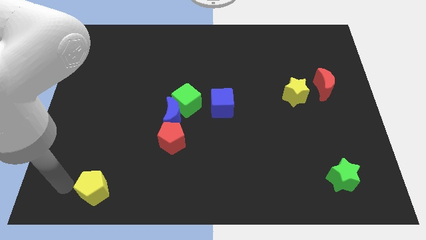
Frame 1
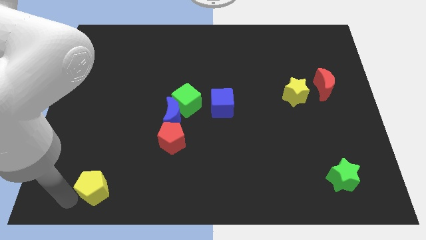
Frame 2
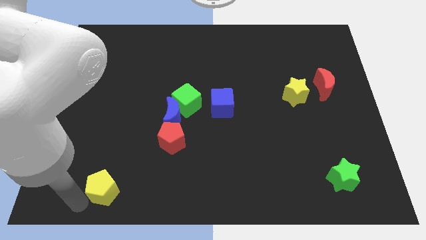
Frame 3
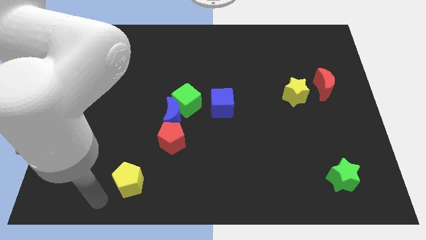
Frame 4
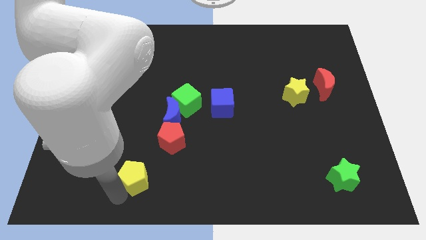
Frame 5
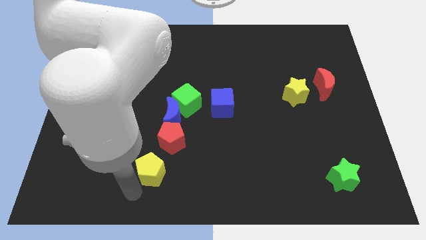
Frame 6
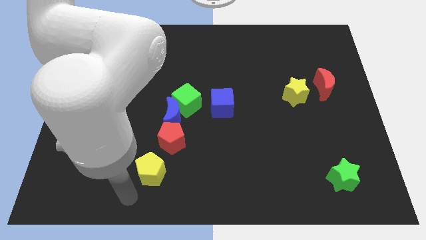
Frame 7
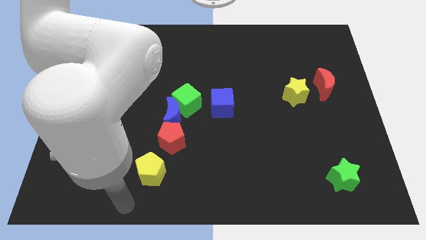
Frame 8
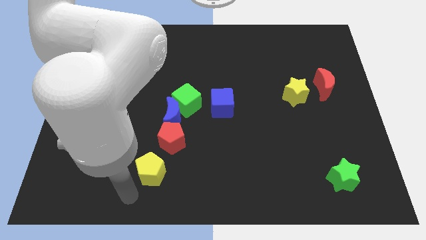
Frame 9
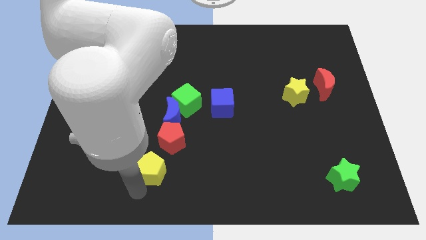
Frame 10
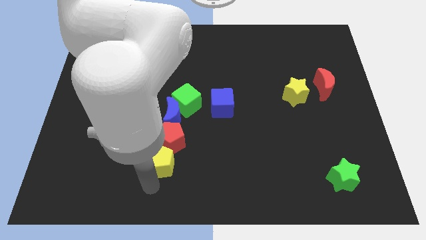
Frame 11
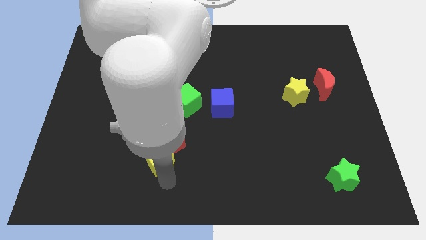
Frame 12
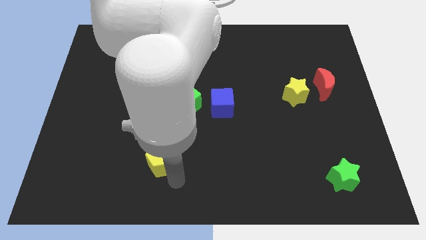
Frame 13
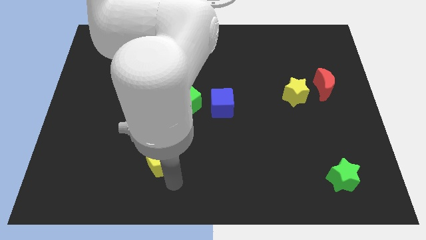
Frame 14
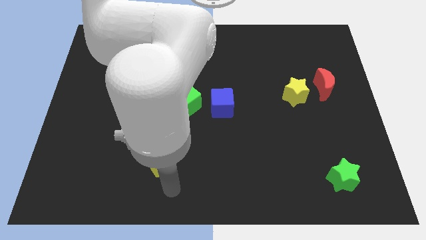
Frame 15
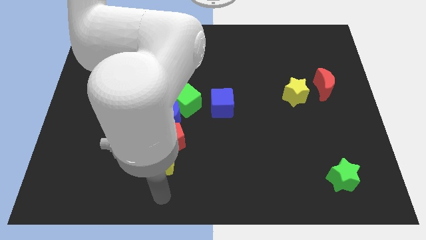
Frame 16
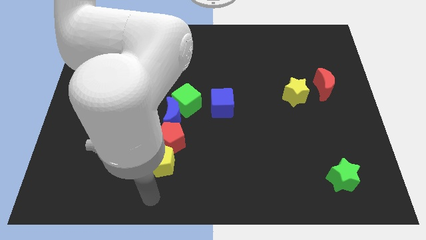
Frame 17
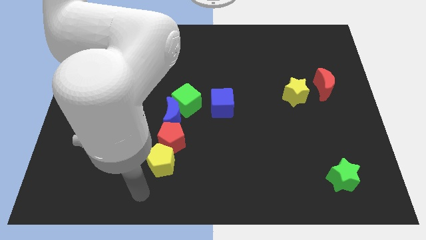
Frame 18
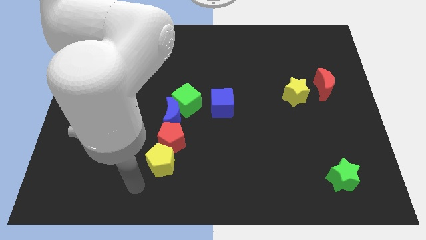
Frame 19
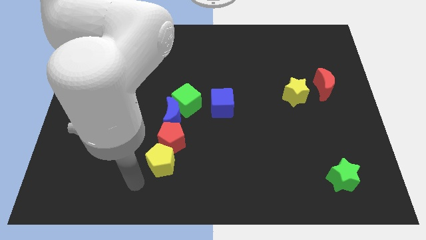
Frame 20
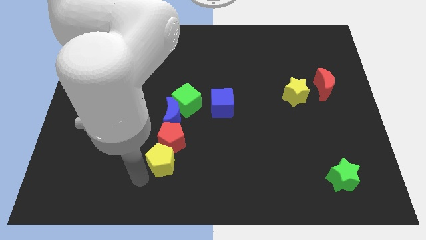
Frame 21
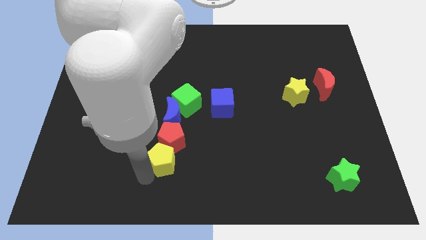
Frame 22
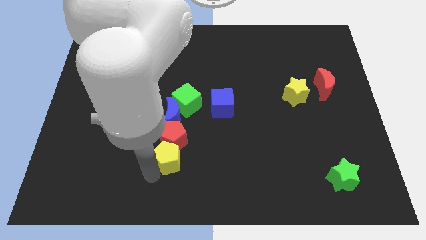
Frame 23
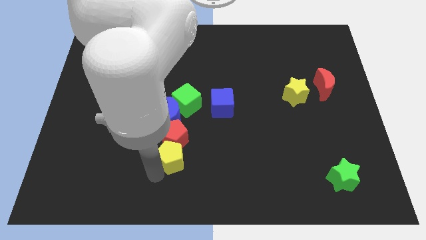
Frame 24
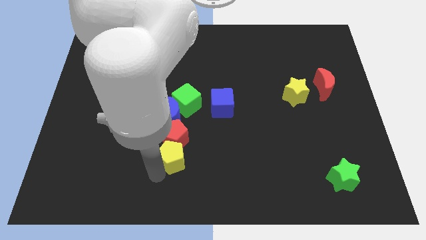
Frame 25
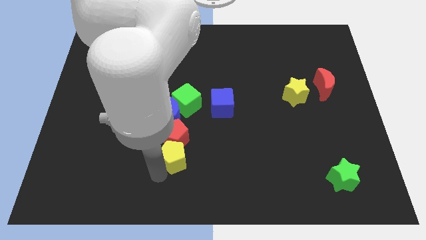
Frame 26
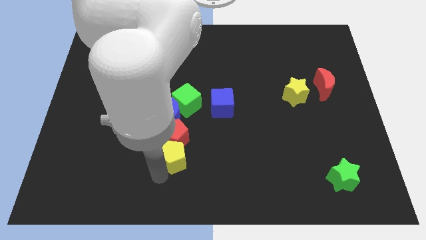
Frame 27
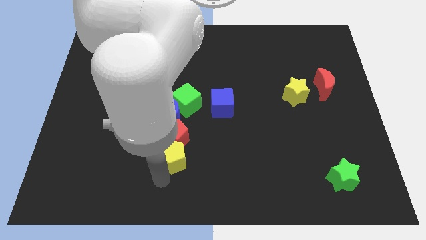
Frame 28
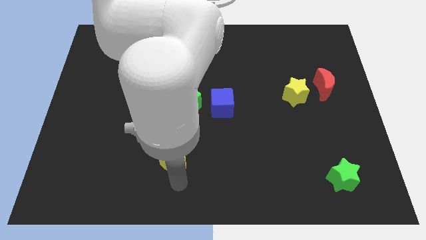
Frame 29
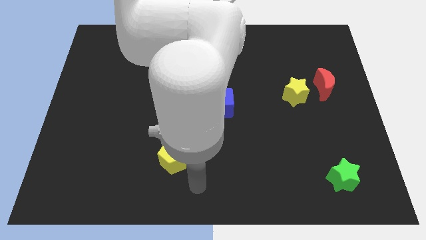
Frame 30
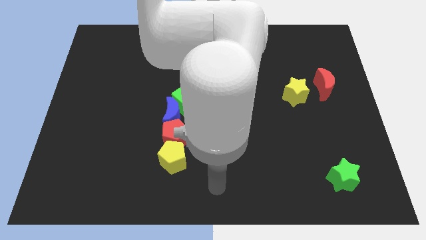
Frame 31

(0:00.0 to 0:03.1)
move yellow pentagon into red pentagon

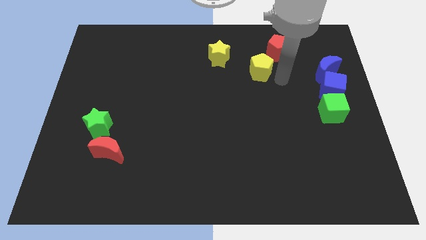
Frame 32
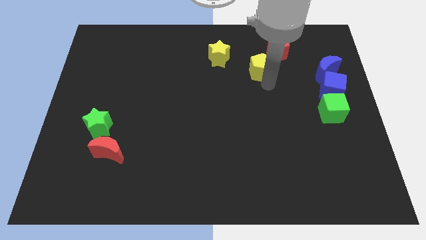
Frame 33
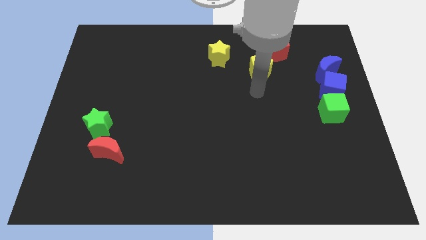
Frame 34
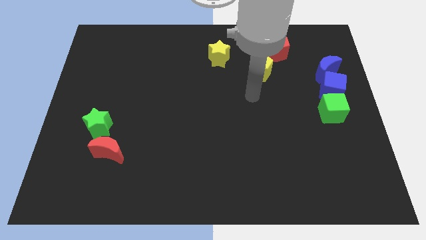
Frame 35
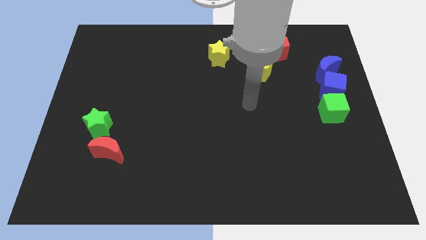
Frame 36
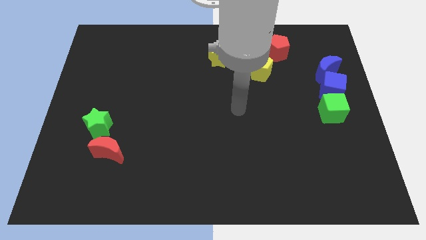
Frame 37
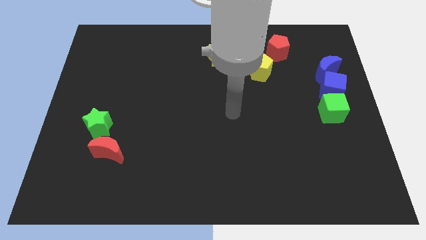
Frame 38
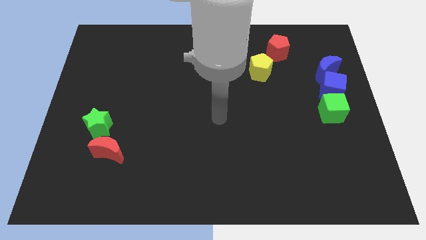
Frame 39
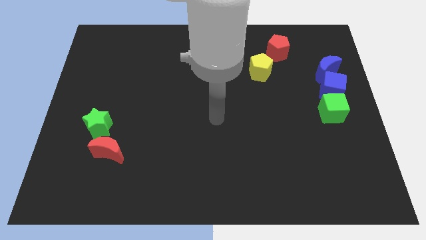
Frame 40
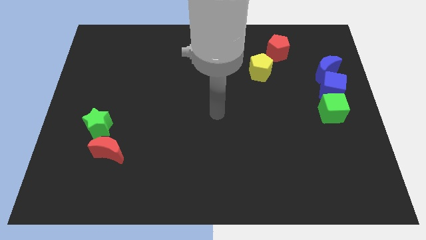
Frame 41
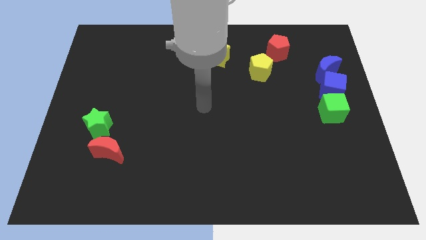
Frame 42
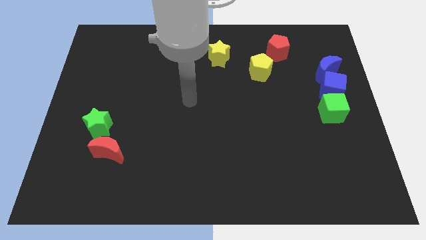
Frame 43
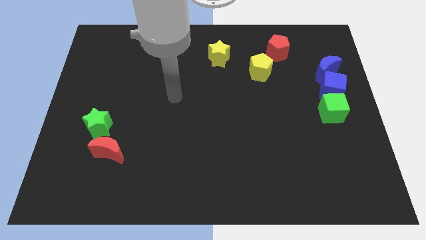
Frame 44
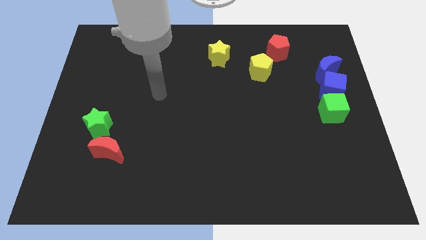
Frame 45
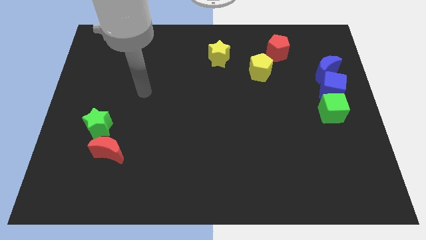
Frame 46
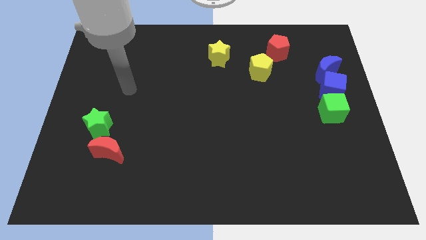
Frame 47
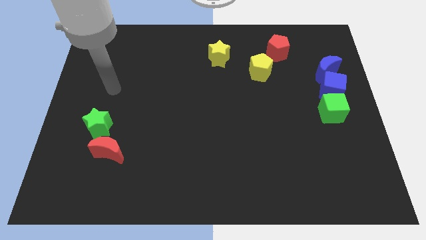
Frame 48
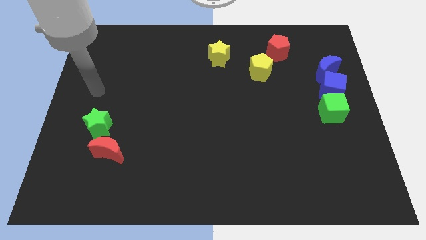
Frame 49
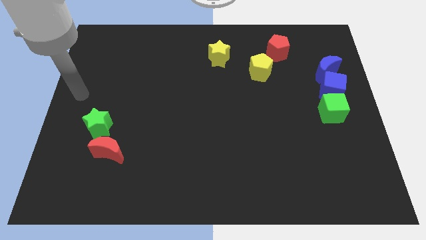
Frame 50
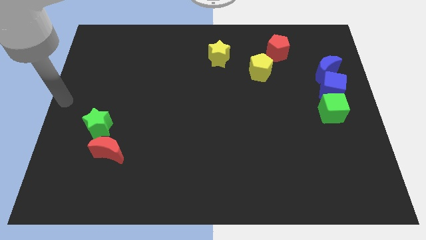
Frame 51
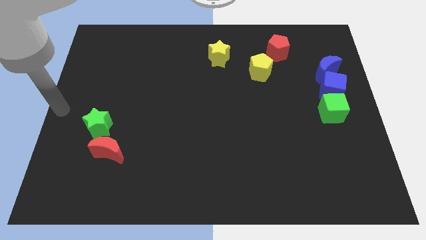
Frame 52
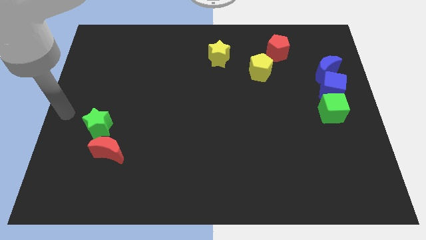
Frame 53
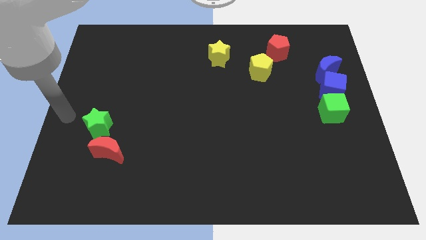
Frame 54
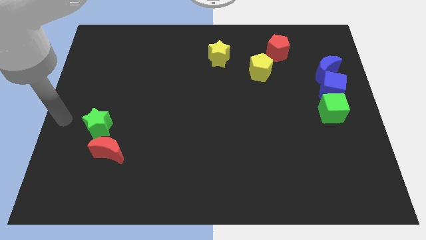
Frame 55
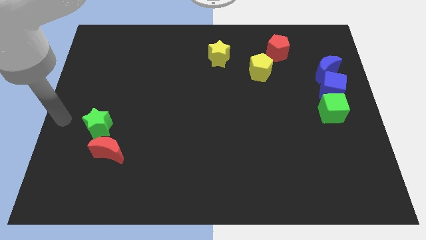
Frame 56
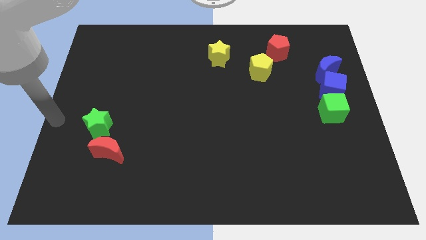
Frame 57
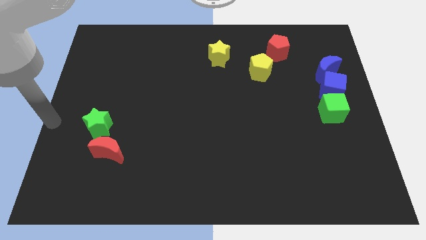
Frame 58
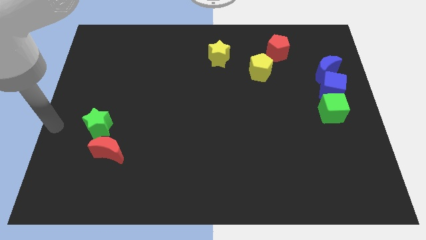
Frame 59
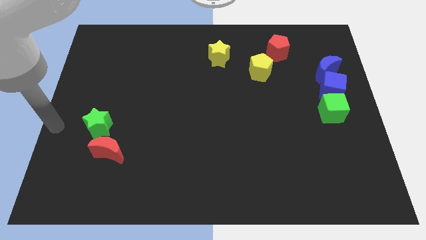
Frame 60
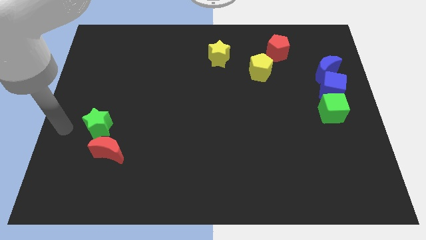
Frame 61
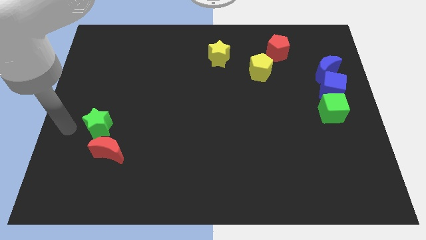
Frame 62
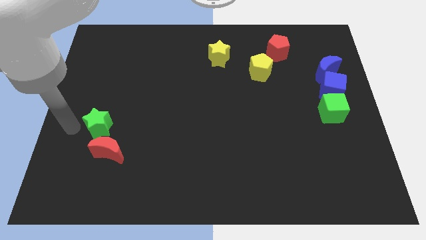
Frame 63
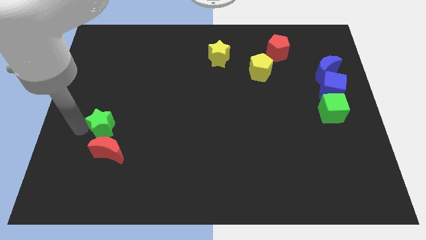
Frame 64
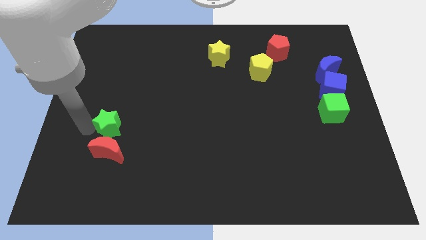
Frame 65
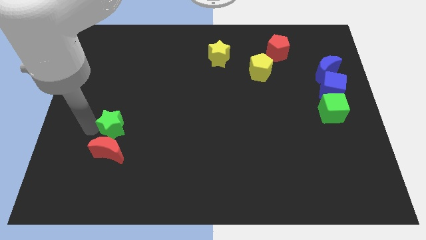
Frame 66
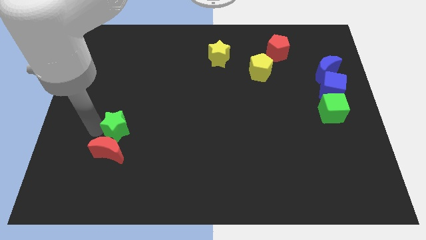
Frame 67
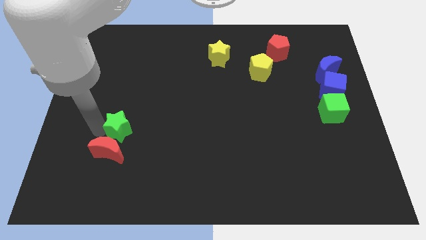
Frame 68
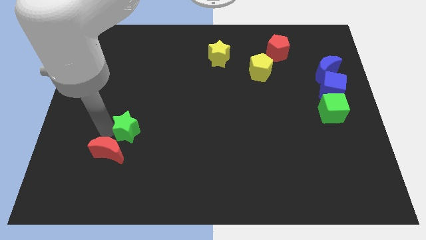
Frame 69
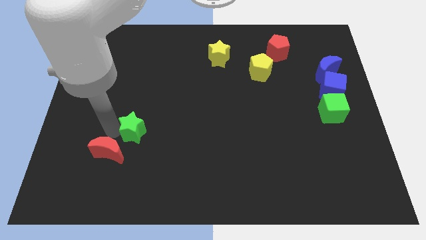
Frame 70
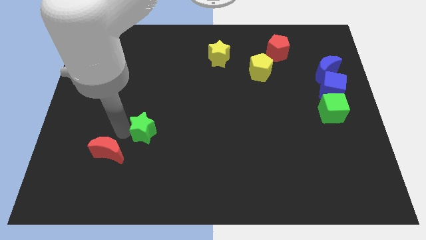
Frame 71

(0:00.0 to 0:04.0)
separate green star from the red moon

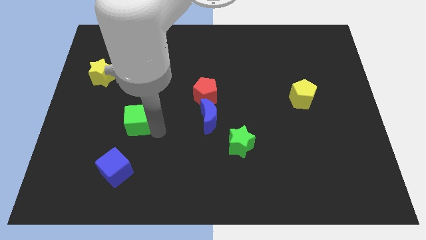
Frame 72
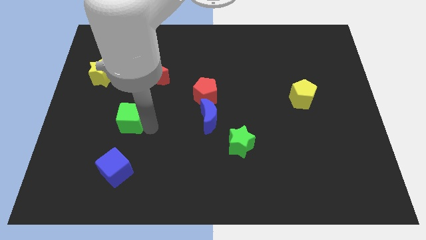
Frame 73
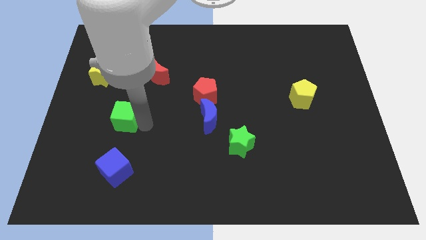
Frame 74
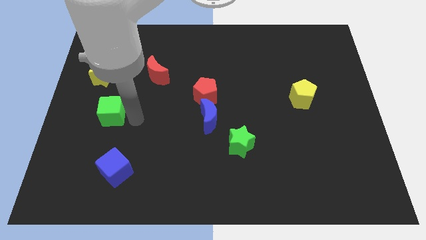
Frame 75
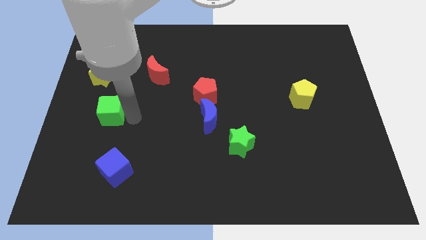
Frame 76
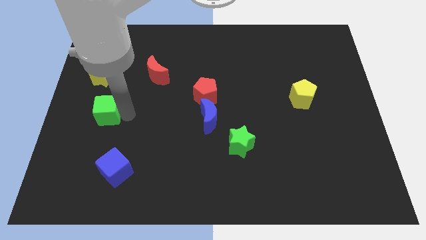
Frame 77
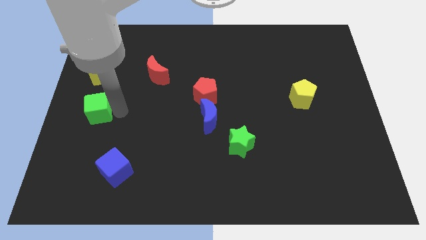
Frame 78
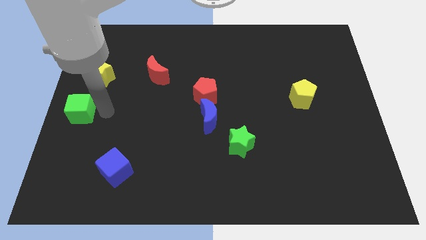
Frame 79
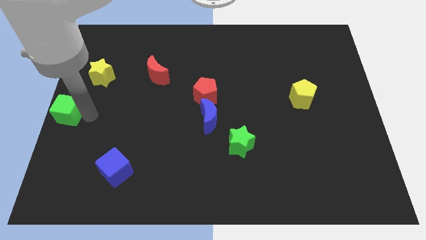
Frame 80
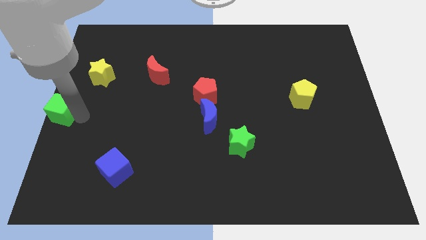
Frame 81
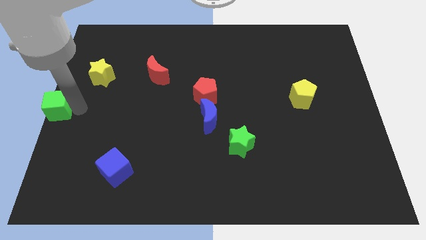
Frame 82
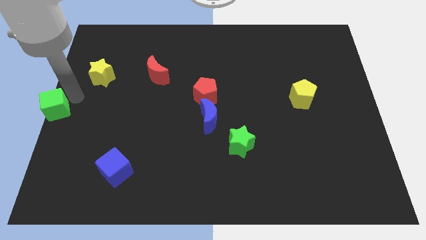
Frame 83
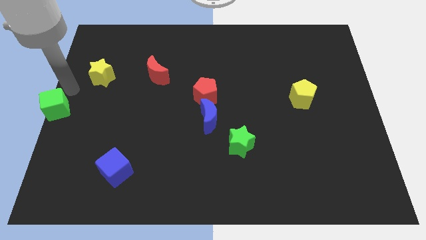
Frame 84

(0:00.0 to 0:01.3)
push the green cube to the center left of the board

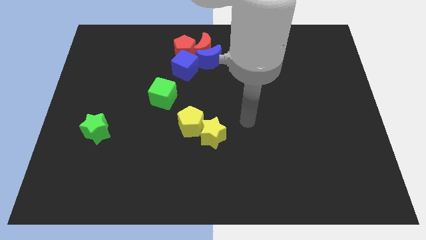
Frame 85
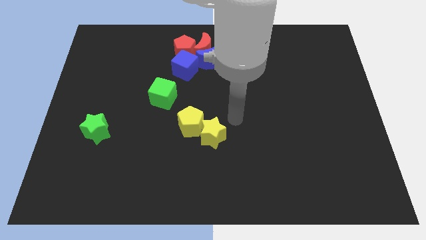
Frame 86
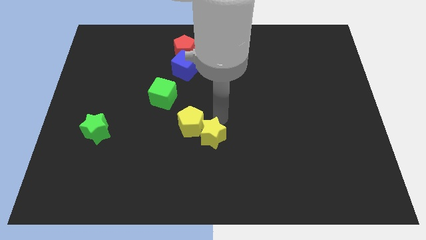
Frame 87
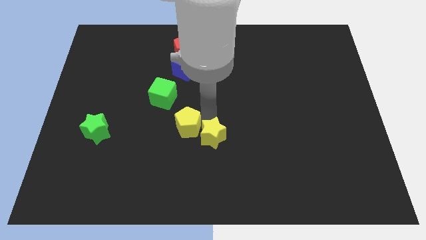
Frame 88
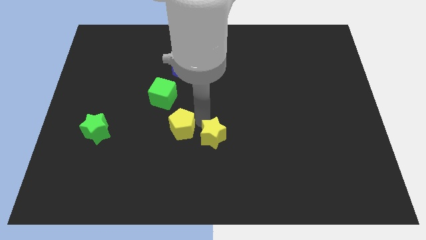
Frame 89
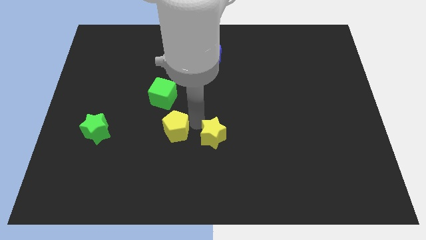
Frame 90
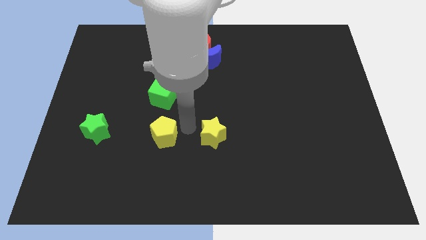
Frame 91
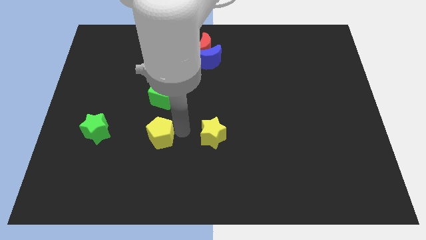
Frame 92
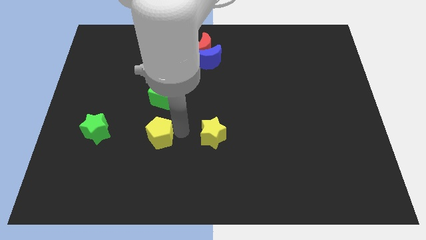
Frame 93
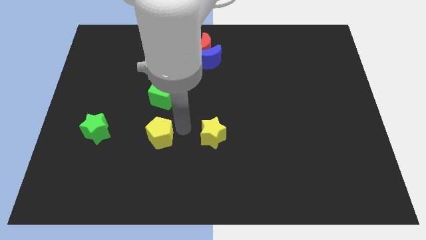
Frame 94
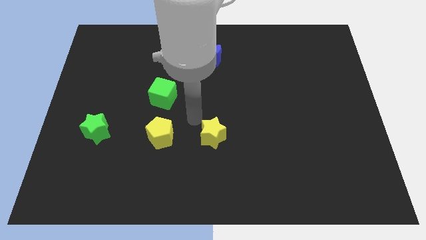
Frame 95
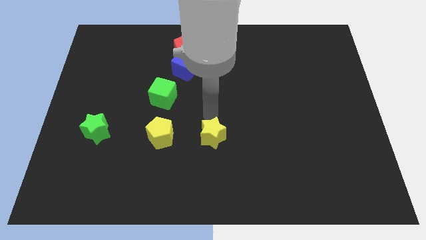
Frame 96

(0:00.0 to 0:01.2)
put the yellow pentagon in between the green star and the yellow star
